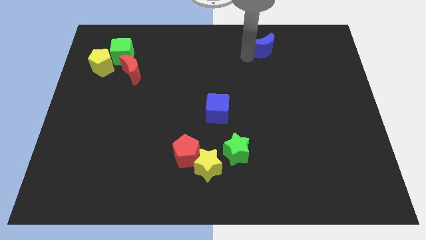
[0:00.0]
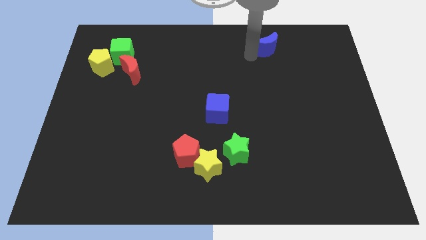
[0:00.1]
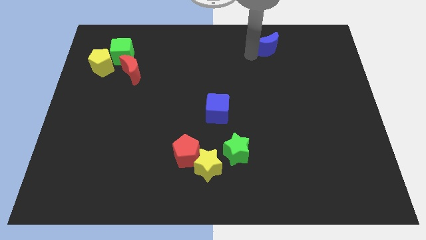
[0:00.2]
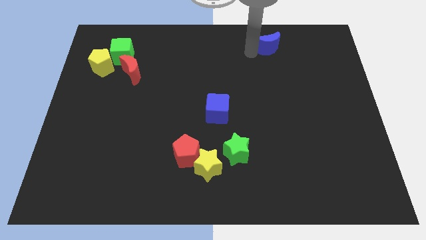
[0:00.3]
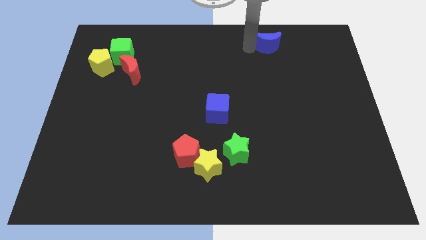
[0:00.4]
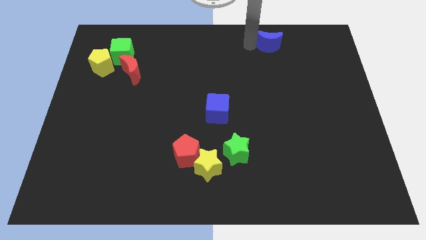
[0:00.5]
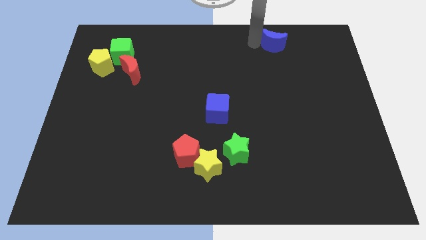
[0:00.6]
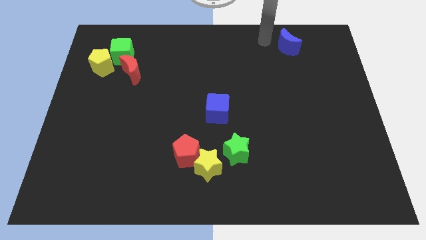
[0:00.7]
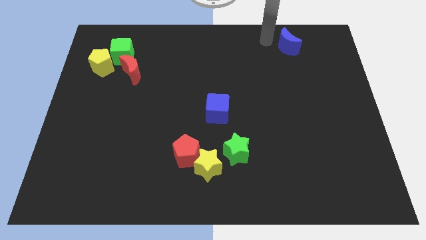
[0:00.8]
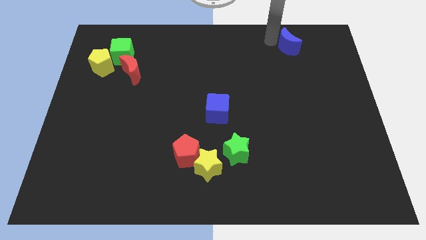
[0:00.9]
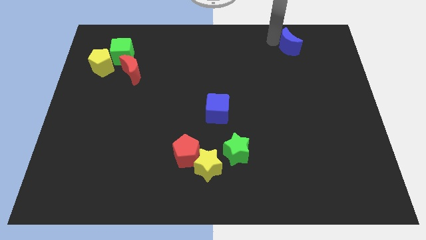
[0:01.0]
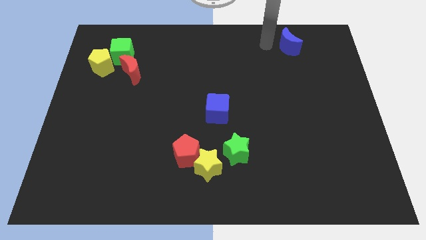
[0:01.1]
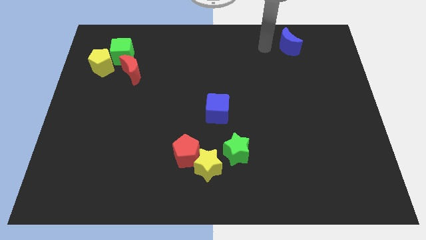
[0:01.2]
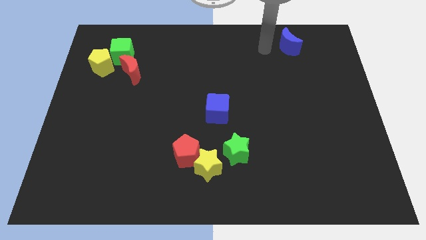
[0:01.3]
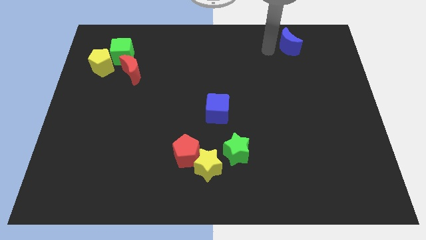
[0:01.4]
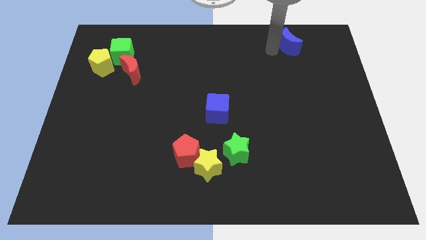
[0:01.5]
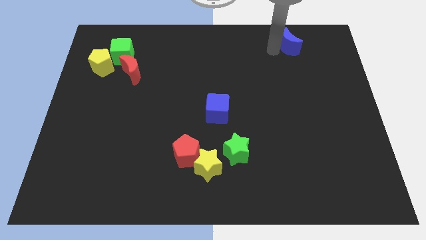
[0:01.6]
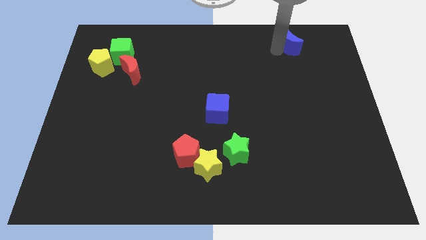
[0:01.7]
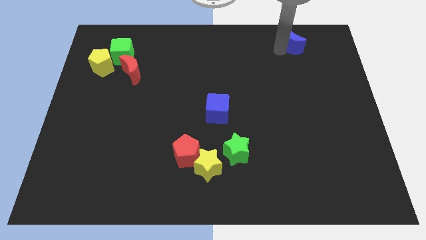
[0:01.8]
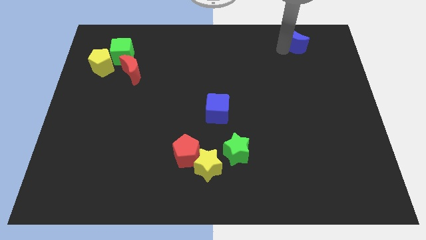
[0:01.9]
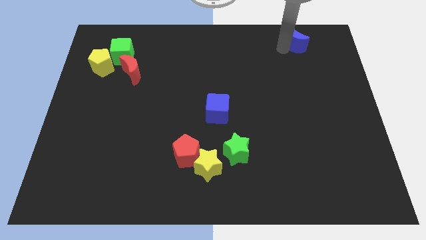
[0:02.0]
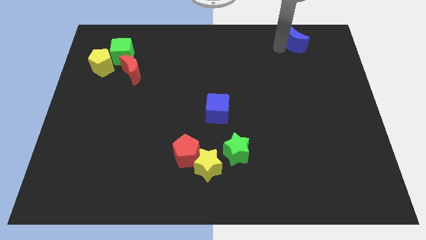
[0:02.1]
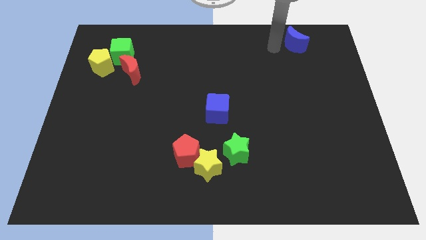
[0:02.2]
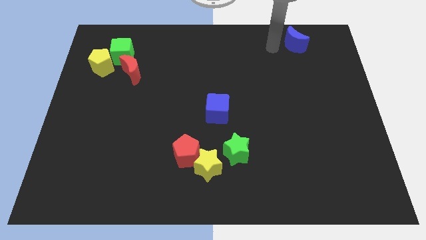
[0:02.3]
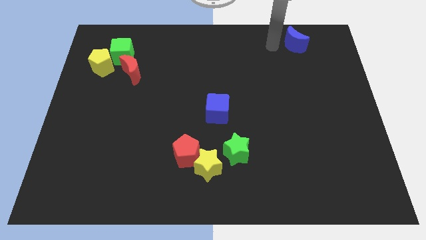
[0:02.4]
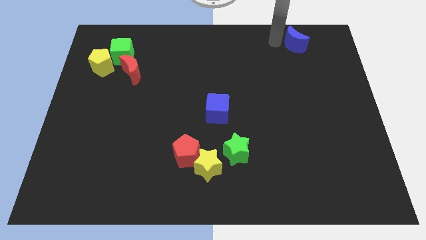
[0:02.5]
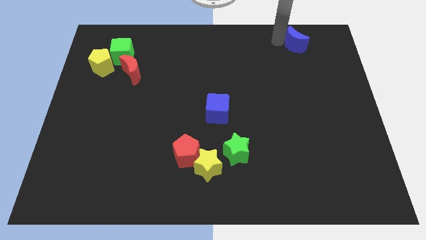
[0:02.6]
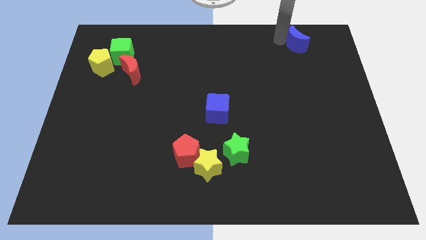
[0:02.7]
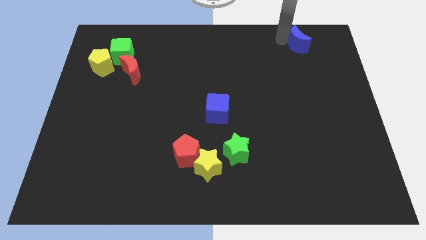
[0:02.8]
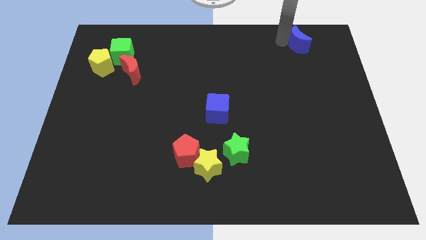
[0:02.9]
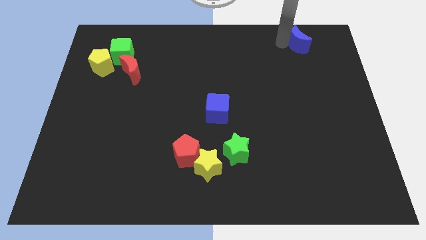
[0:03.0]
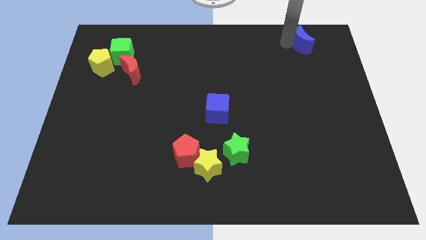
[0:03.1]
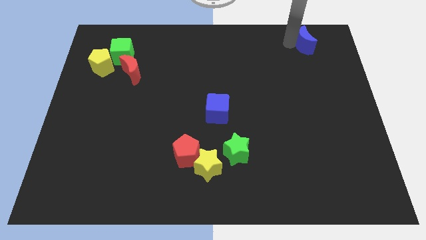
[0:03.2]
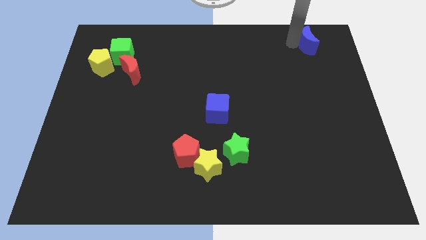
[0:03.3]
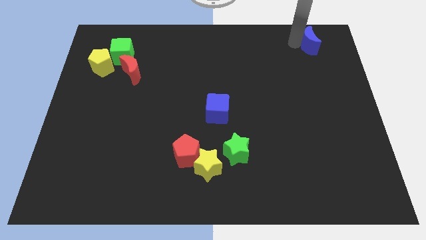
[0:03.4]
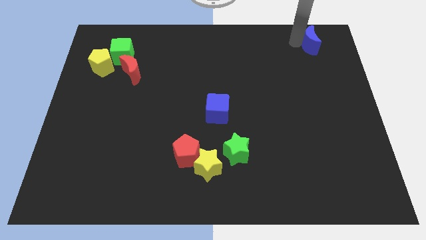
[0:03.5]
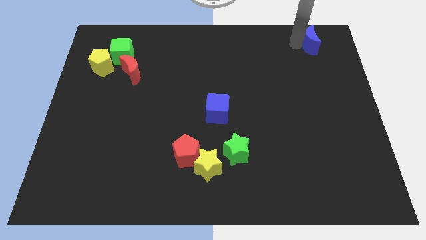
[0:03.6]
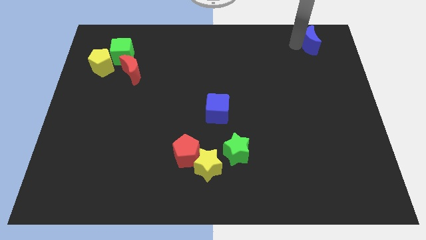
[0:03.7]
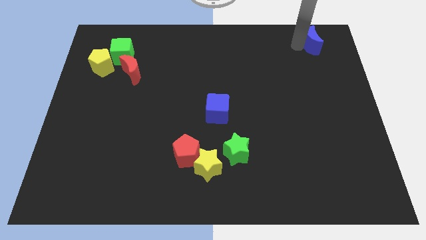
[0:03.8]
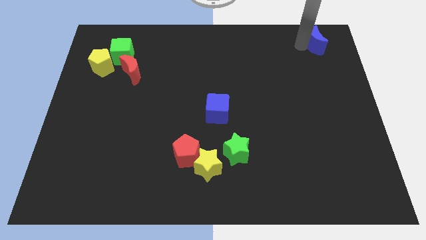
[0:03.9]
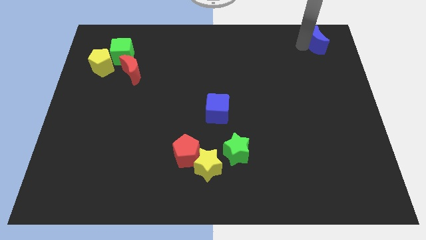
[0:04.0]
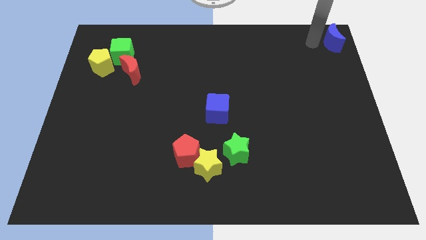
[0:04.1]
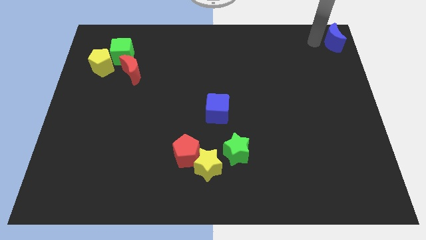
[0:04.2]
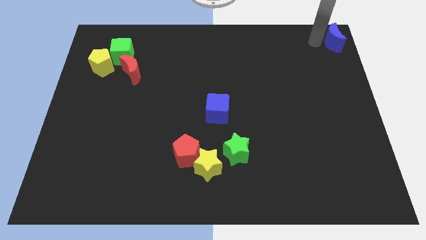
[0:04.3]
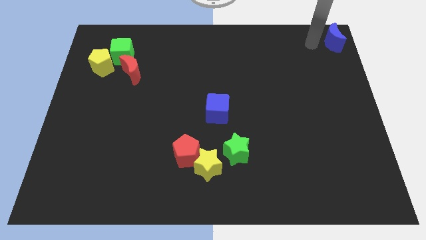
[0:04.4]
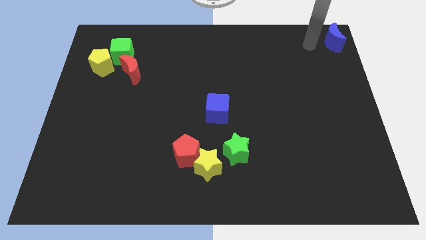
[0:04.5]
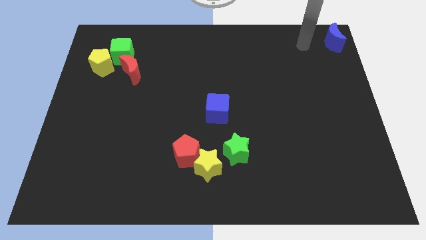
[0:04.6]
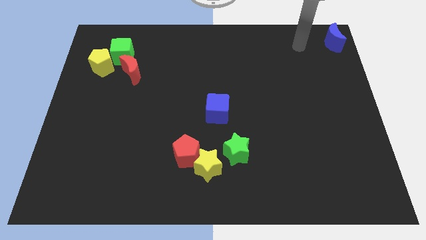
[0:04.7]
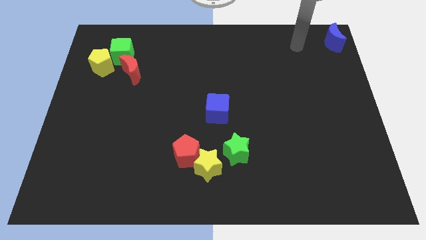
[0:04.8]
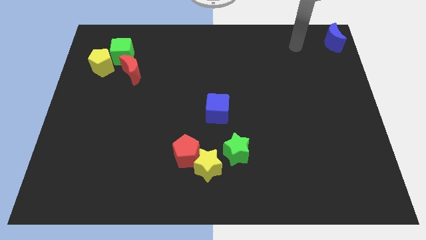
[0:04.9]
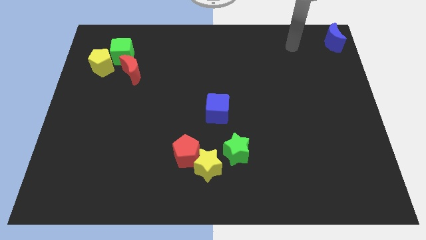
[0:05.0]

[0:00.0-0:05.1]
slide blue moon to the top right

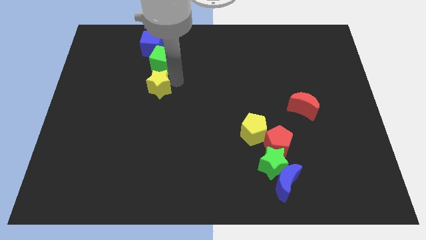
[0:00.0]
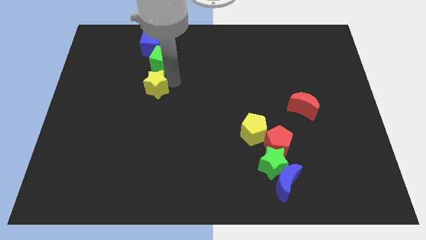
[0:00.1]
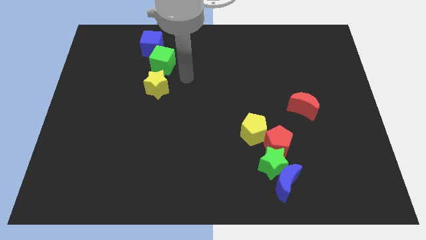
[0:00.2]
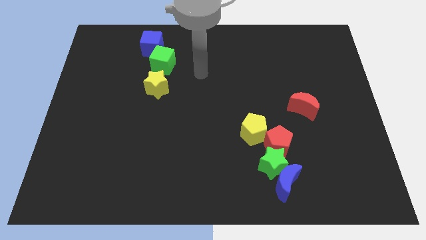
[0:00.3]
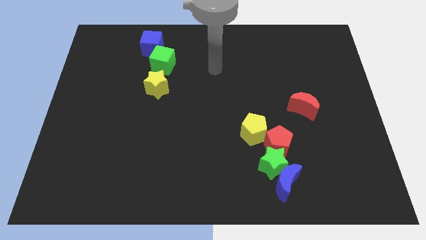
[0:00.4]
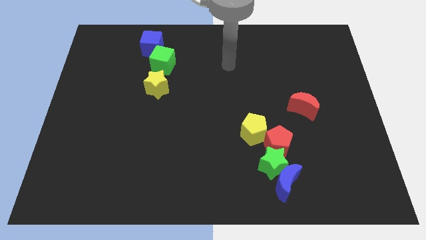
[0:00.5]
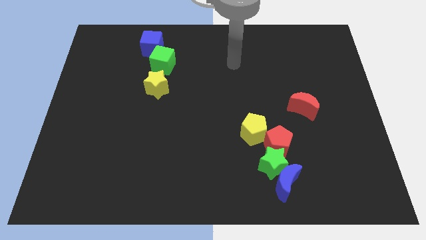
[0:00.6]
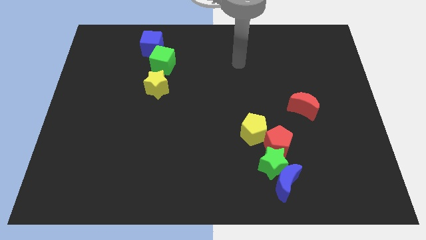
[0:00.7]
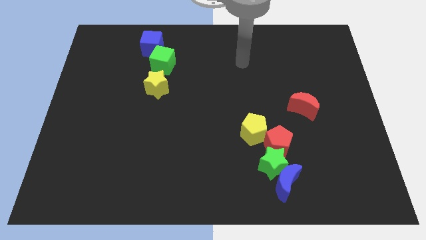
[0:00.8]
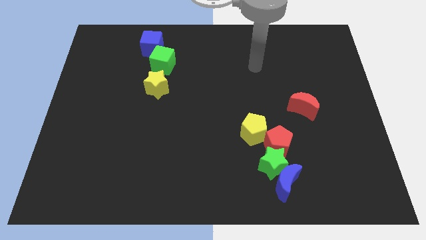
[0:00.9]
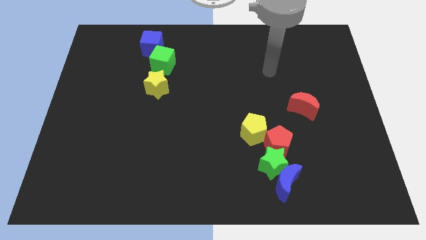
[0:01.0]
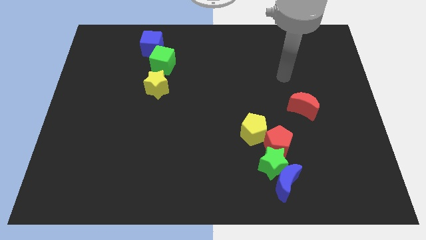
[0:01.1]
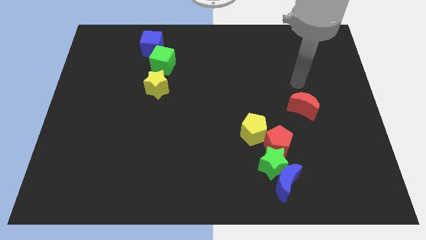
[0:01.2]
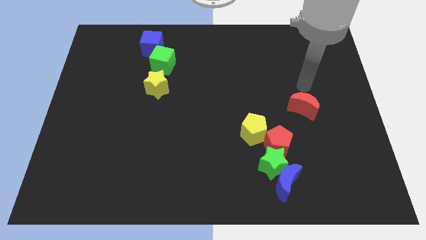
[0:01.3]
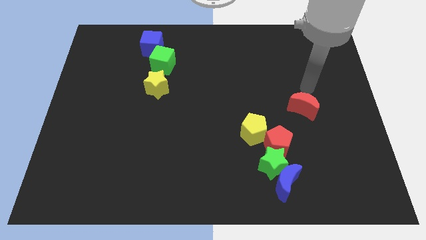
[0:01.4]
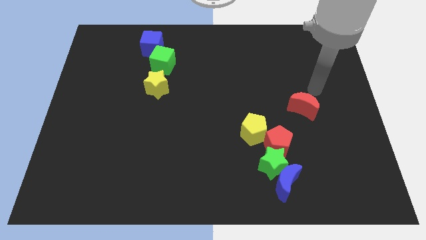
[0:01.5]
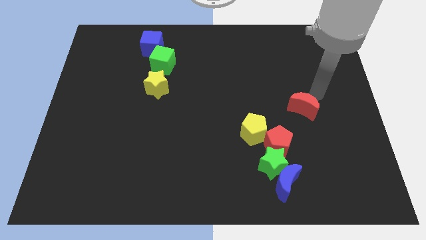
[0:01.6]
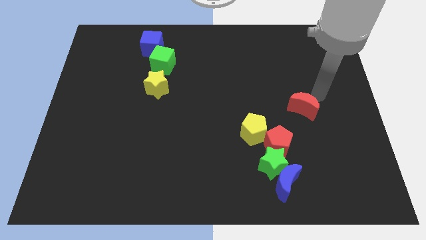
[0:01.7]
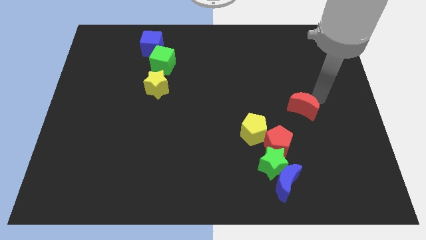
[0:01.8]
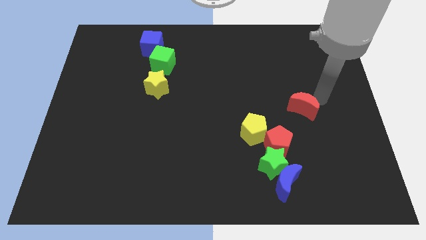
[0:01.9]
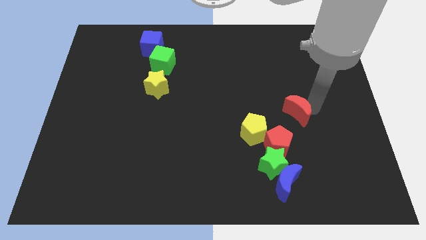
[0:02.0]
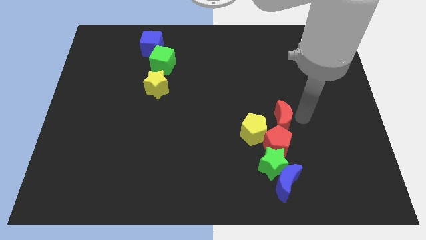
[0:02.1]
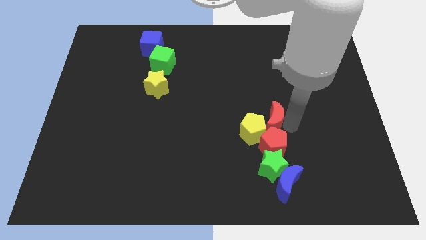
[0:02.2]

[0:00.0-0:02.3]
push the red crescent to the top of the red pentagon

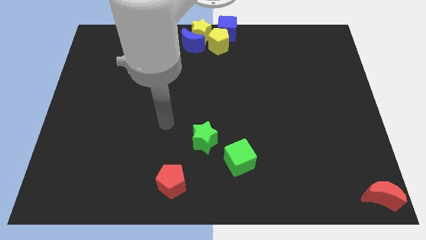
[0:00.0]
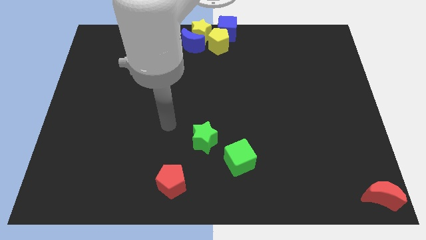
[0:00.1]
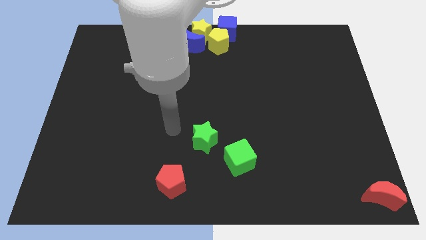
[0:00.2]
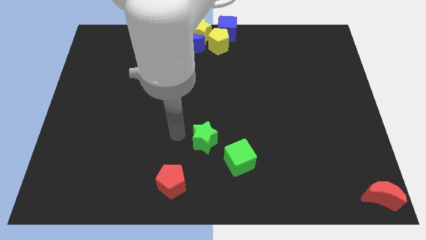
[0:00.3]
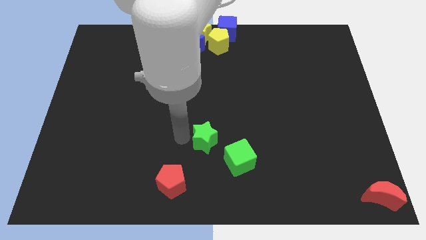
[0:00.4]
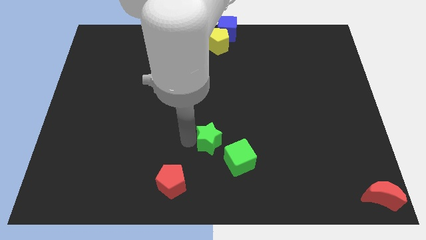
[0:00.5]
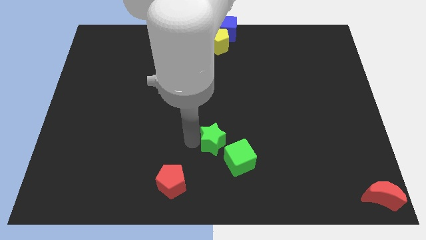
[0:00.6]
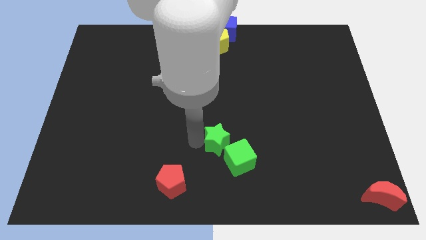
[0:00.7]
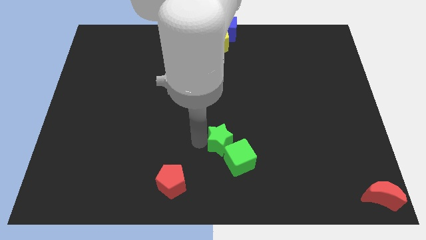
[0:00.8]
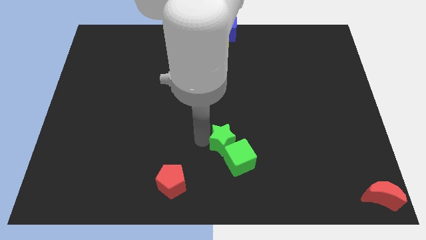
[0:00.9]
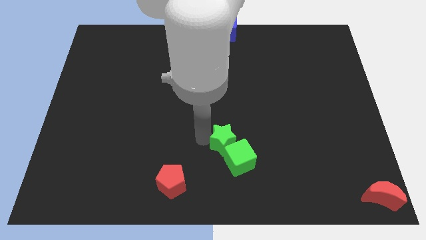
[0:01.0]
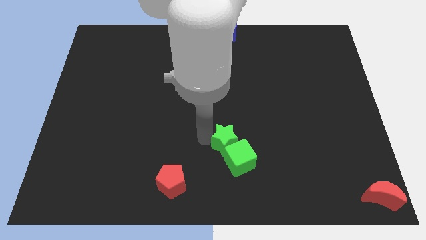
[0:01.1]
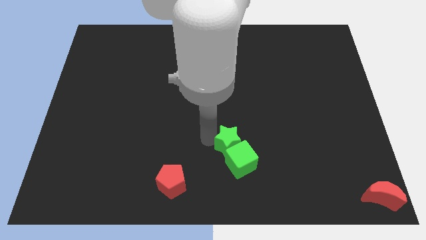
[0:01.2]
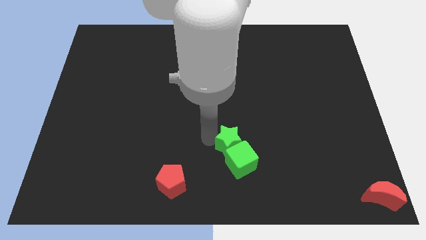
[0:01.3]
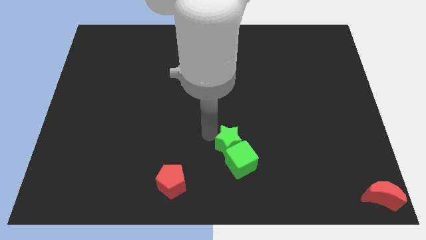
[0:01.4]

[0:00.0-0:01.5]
group up the green blocks
